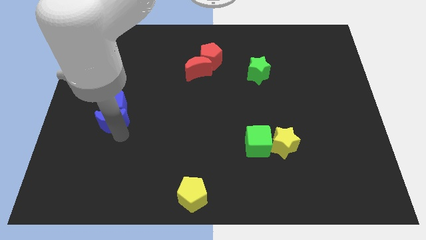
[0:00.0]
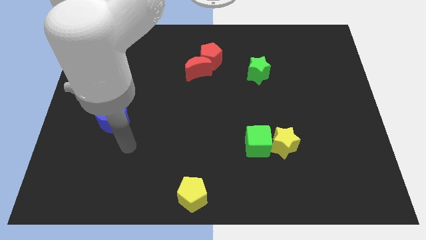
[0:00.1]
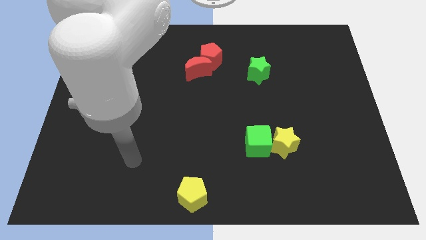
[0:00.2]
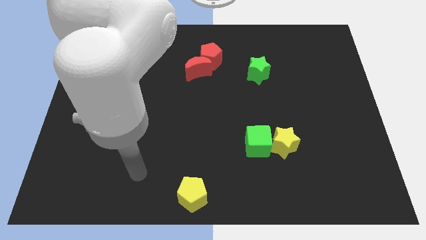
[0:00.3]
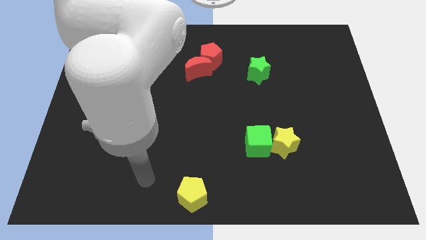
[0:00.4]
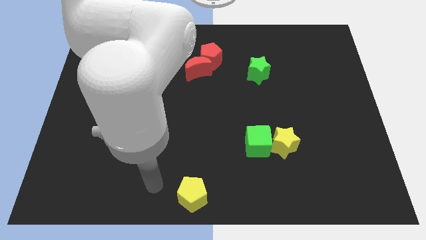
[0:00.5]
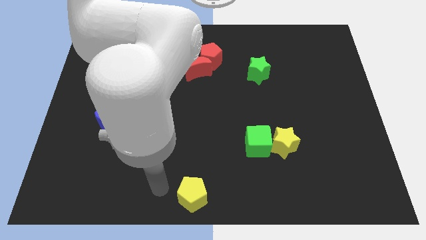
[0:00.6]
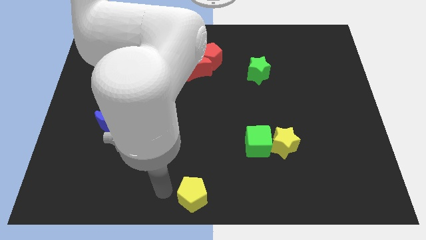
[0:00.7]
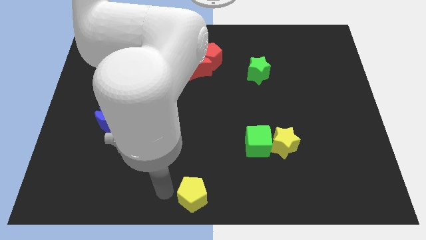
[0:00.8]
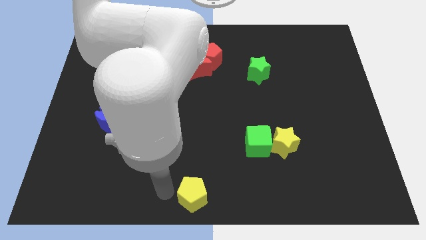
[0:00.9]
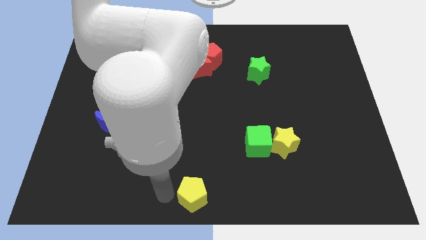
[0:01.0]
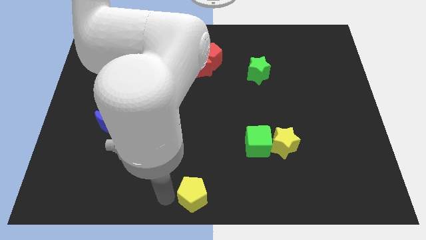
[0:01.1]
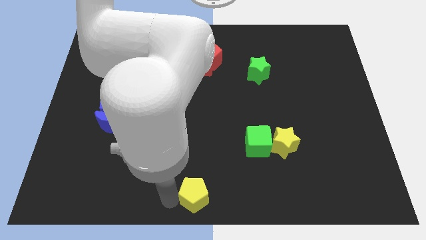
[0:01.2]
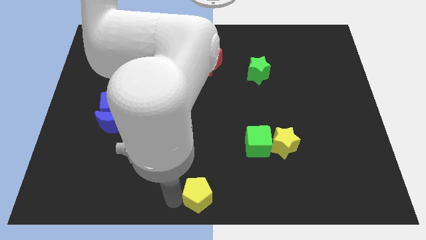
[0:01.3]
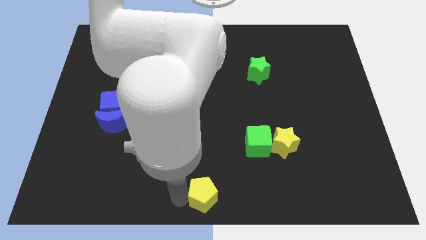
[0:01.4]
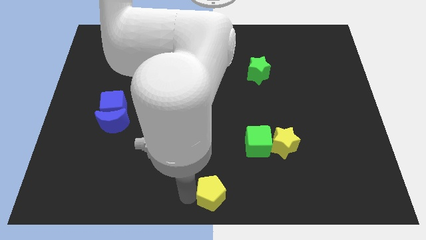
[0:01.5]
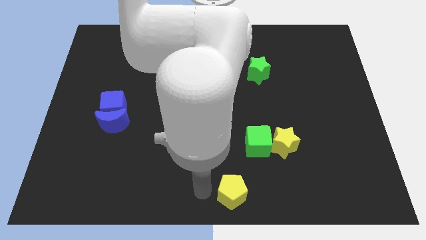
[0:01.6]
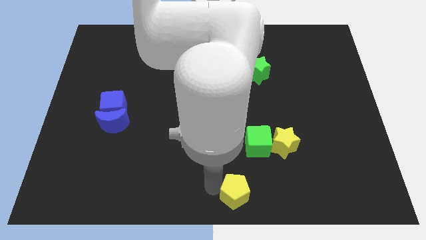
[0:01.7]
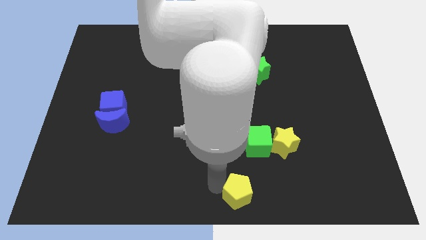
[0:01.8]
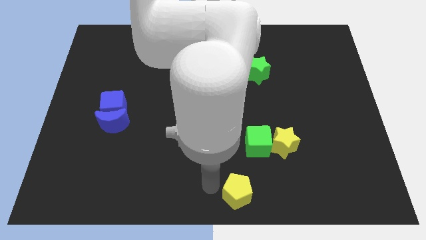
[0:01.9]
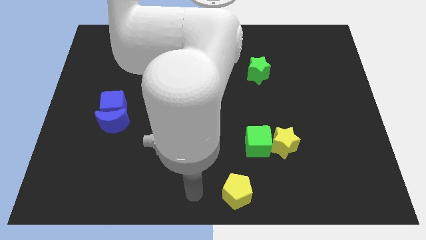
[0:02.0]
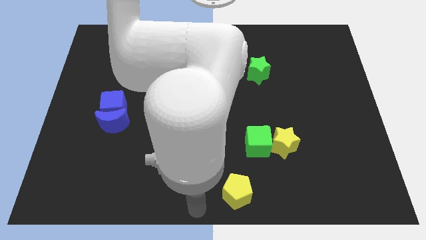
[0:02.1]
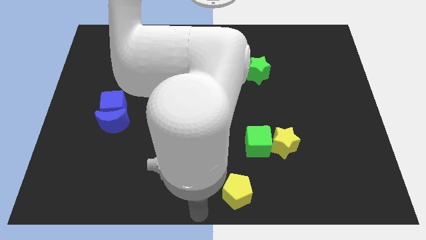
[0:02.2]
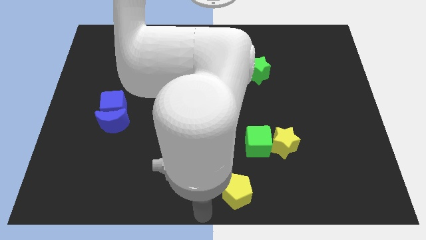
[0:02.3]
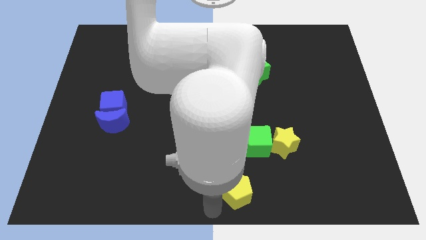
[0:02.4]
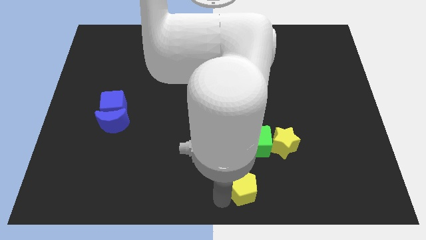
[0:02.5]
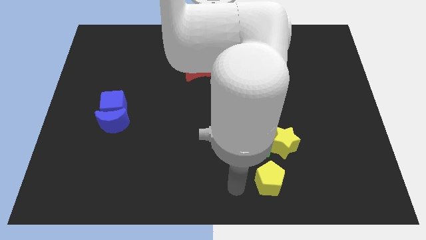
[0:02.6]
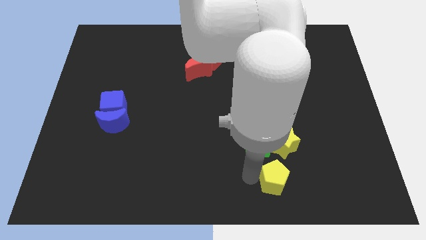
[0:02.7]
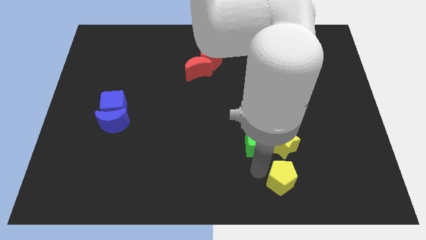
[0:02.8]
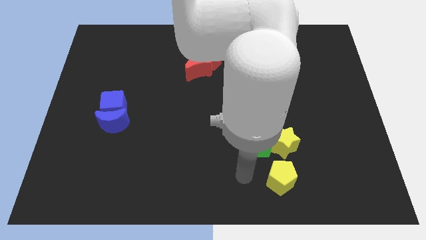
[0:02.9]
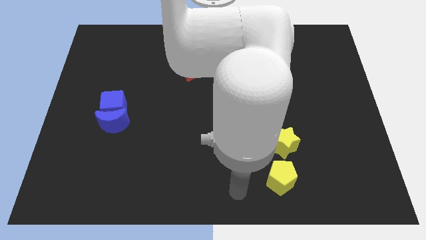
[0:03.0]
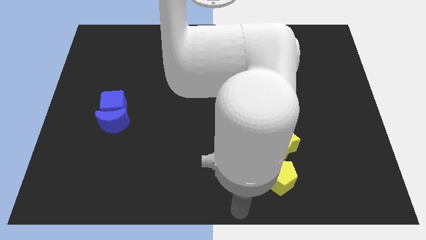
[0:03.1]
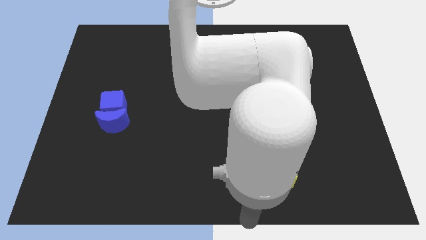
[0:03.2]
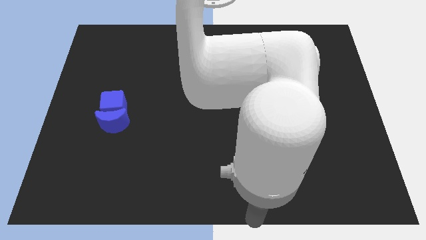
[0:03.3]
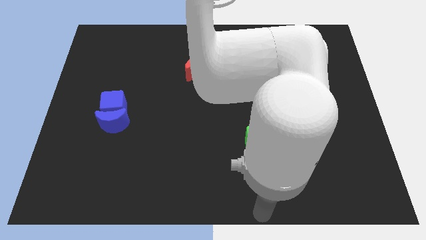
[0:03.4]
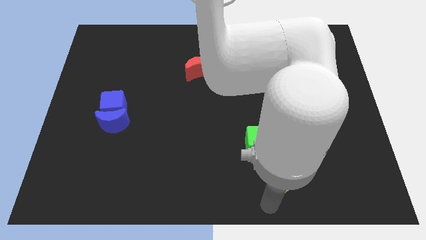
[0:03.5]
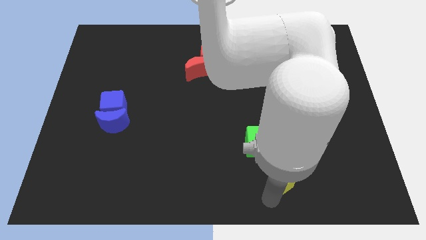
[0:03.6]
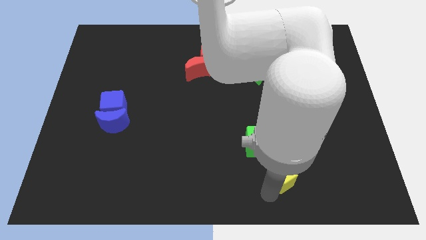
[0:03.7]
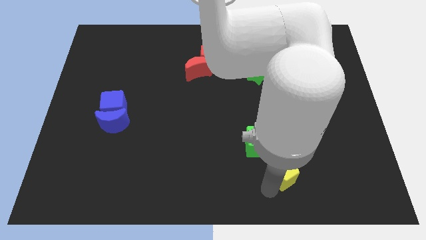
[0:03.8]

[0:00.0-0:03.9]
place the yellow pentagon below the yellow star

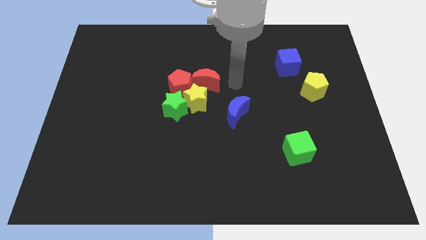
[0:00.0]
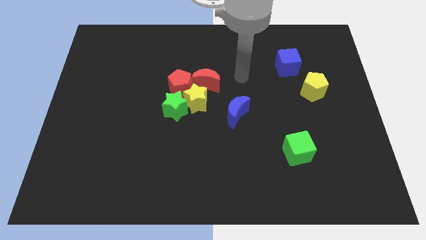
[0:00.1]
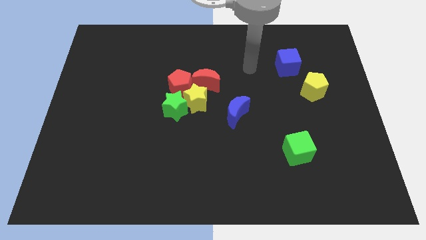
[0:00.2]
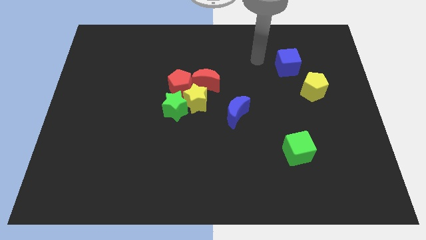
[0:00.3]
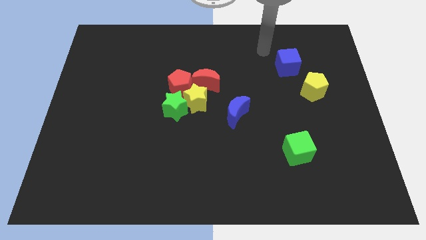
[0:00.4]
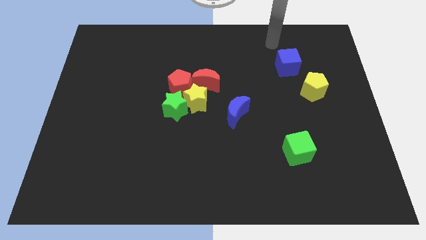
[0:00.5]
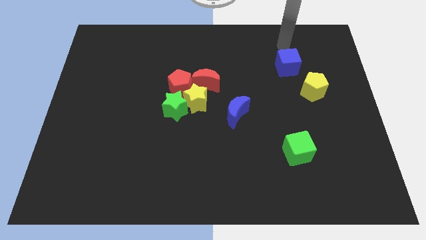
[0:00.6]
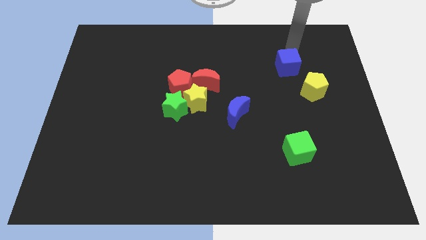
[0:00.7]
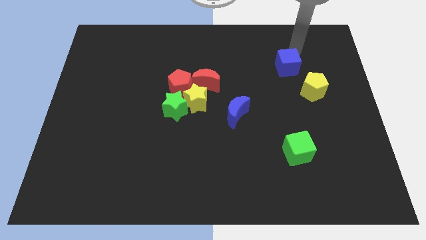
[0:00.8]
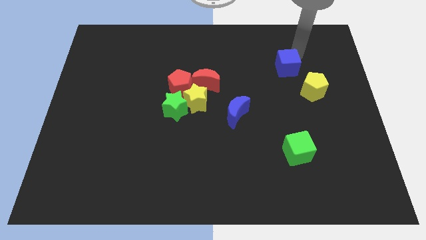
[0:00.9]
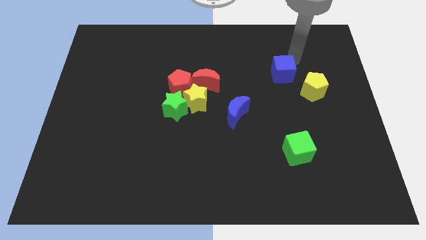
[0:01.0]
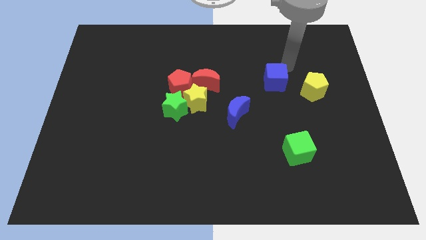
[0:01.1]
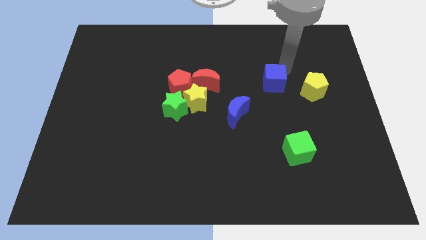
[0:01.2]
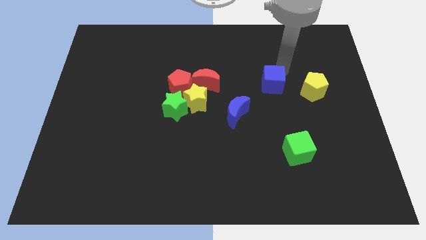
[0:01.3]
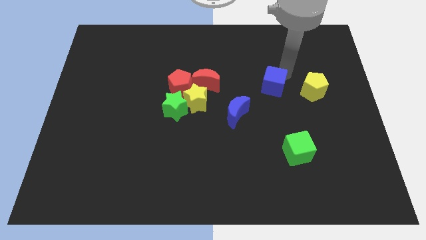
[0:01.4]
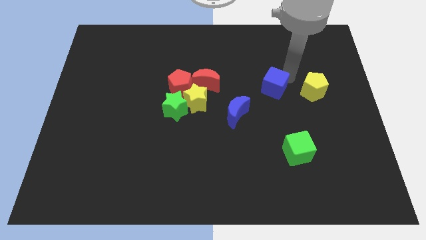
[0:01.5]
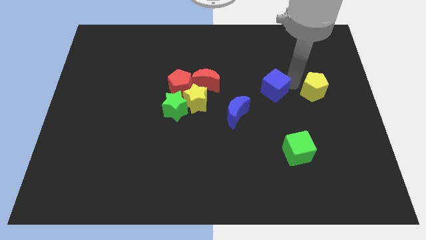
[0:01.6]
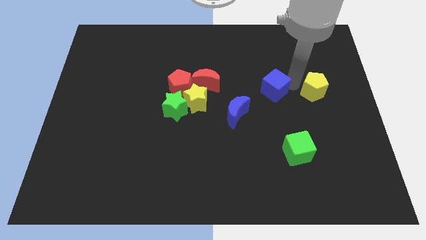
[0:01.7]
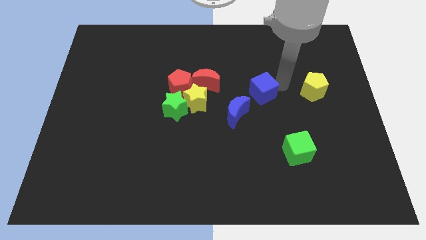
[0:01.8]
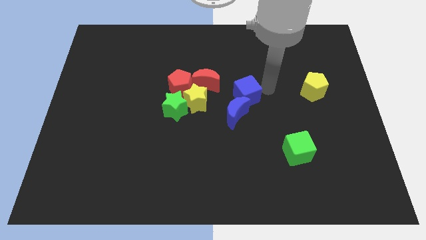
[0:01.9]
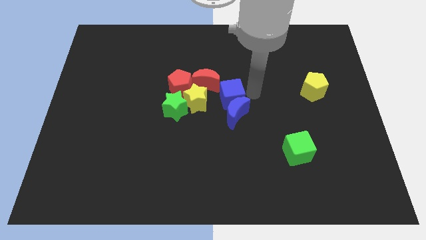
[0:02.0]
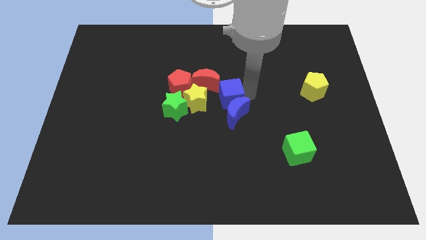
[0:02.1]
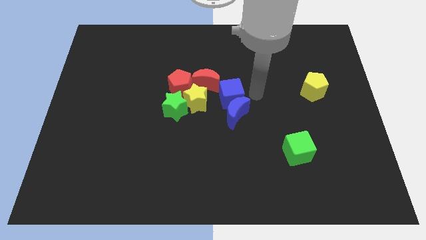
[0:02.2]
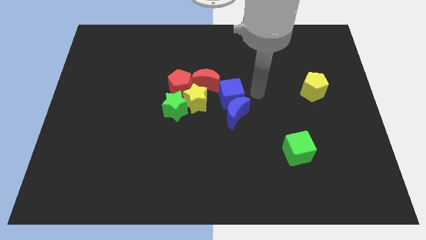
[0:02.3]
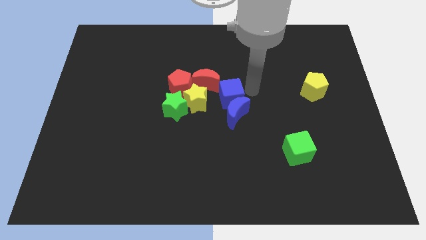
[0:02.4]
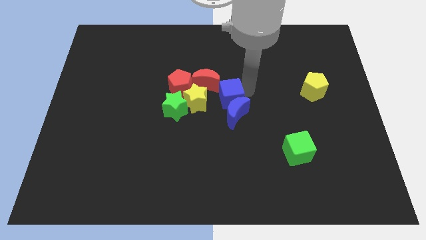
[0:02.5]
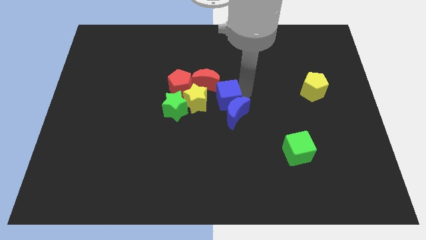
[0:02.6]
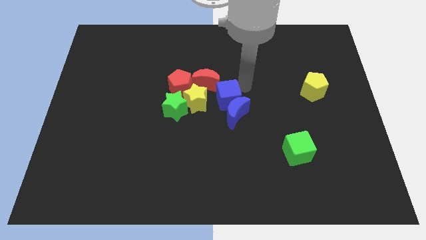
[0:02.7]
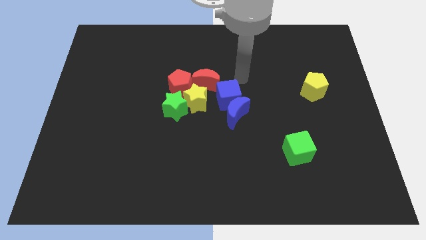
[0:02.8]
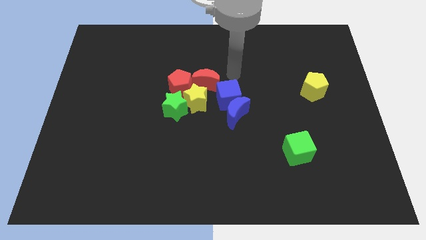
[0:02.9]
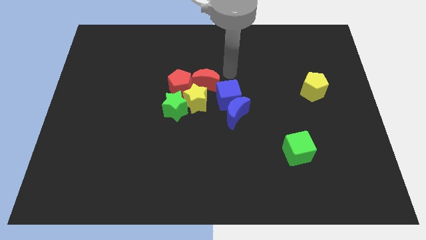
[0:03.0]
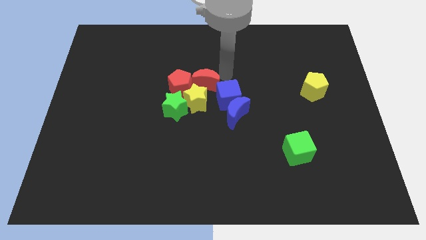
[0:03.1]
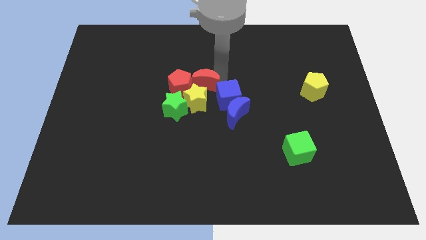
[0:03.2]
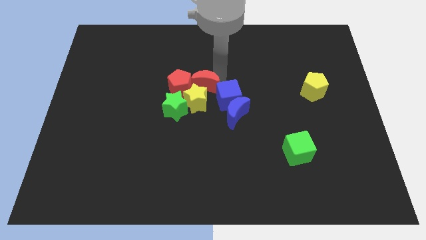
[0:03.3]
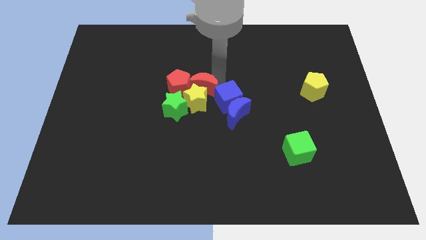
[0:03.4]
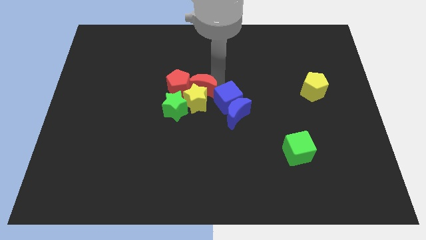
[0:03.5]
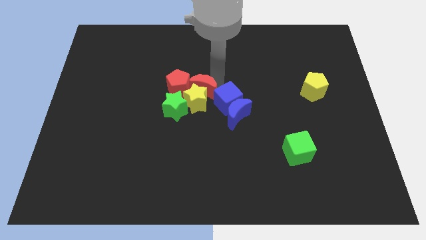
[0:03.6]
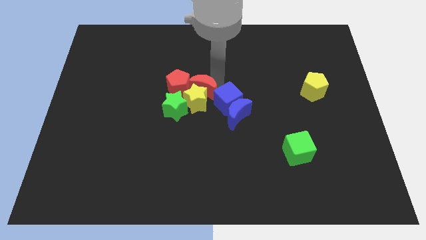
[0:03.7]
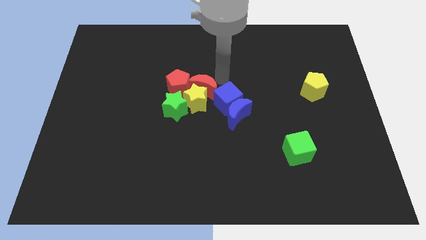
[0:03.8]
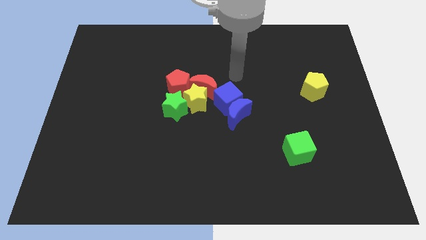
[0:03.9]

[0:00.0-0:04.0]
push blue cube to center of the board

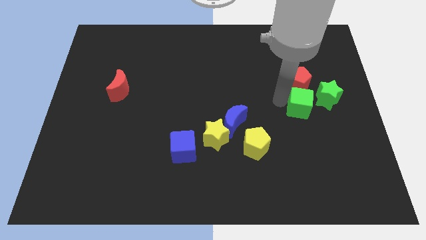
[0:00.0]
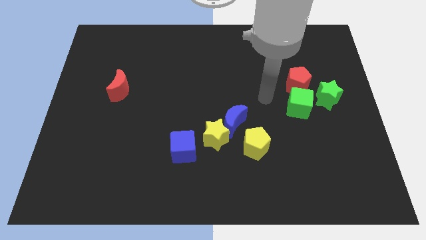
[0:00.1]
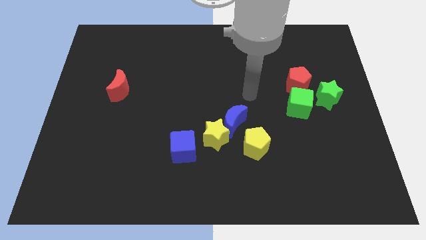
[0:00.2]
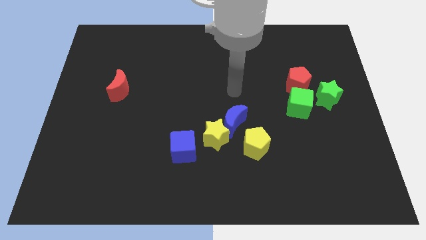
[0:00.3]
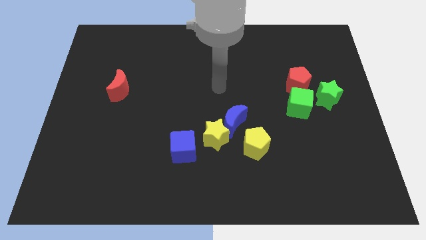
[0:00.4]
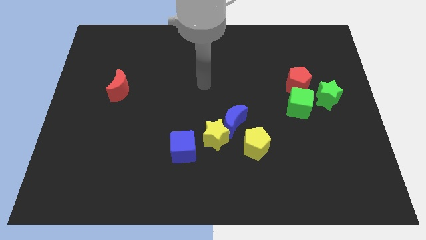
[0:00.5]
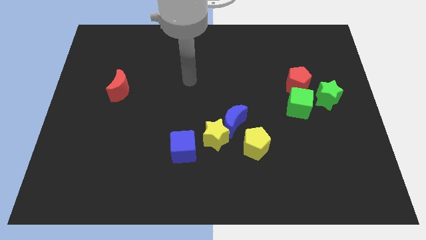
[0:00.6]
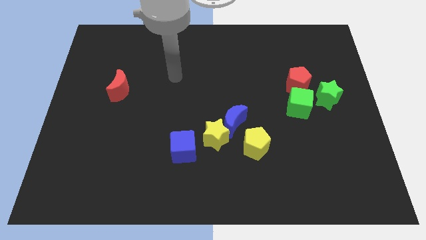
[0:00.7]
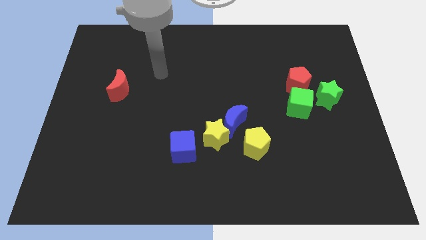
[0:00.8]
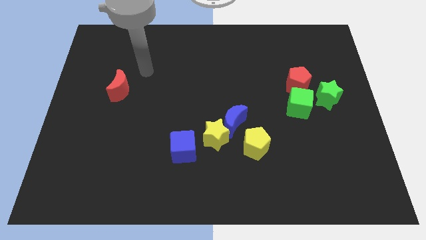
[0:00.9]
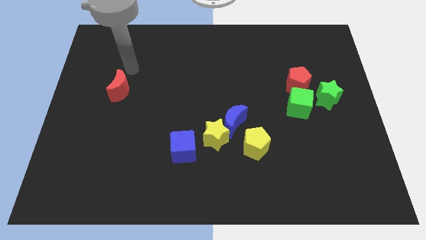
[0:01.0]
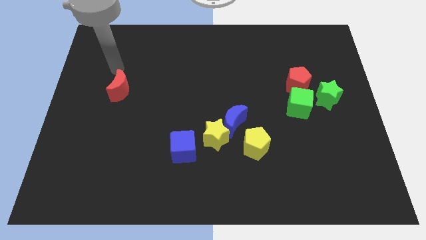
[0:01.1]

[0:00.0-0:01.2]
move your arm to the top of red crescent
